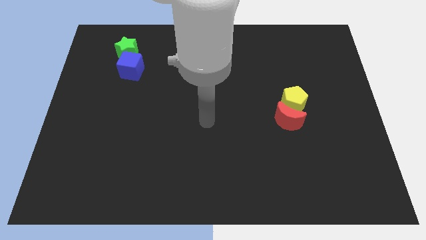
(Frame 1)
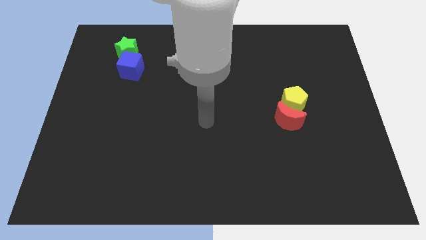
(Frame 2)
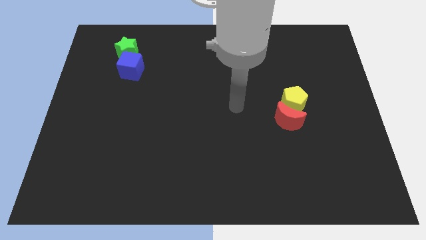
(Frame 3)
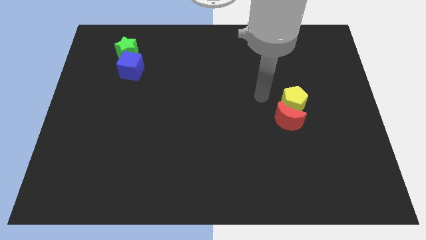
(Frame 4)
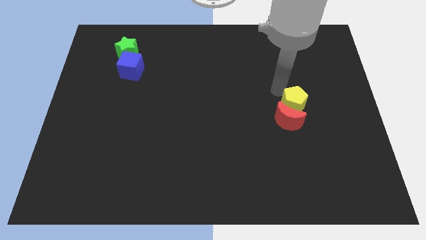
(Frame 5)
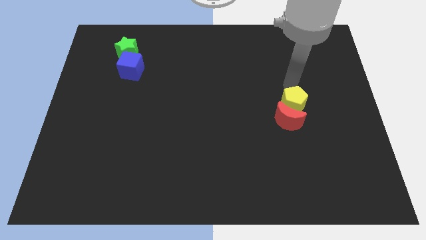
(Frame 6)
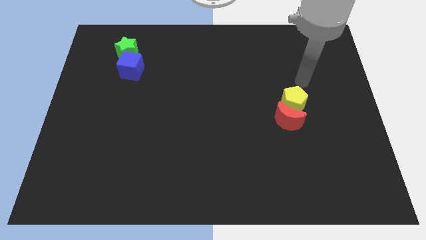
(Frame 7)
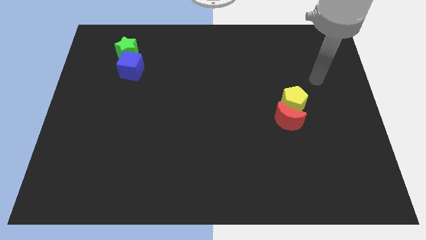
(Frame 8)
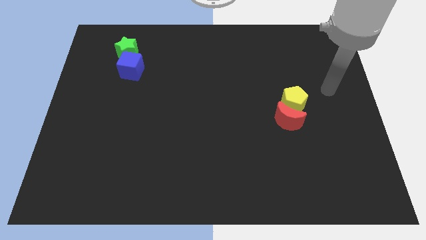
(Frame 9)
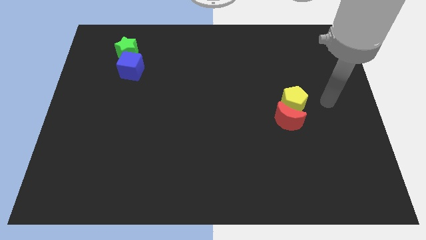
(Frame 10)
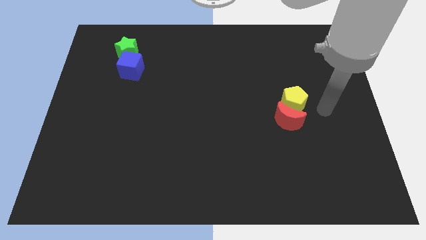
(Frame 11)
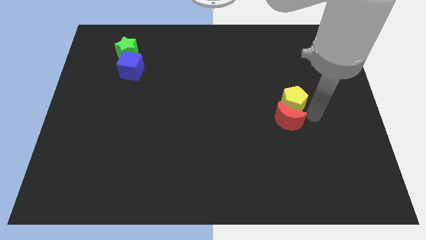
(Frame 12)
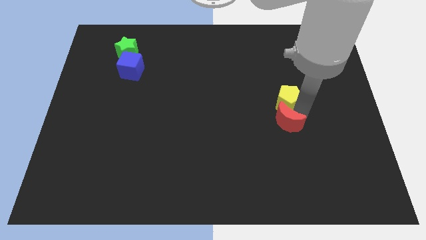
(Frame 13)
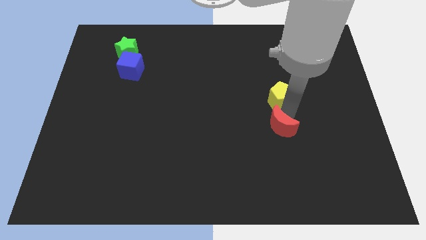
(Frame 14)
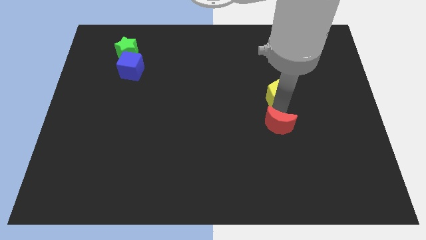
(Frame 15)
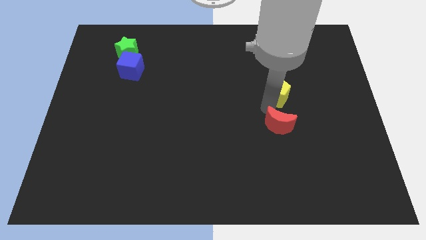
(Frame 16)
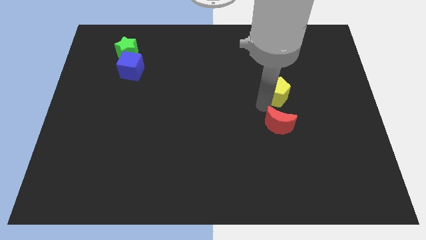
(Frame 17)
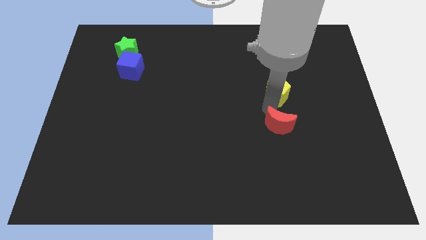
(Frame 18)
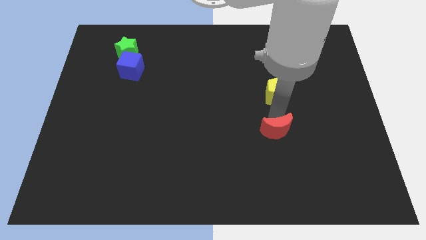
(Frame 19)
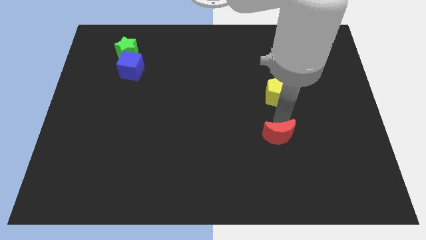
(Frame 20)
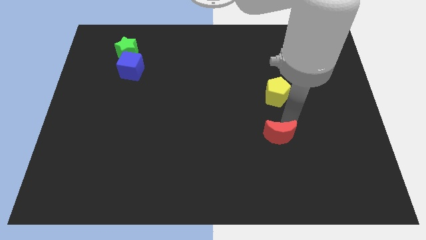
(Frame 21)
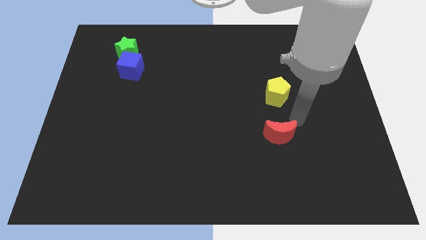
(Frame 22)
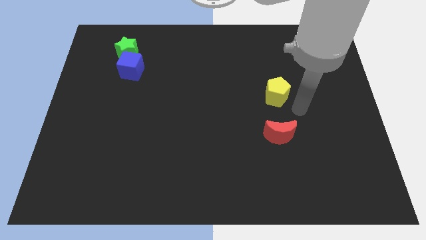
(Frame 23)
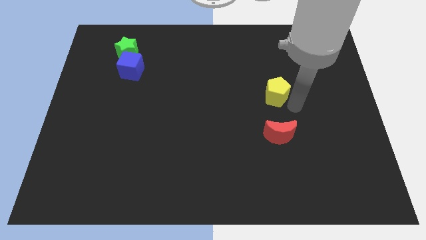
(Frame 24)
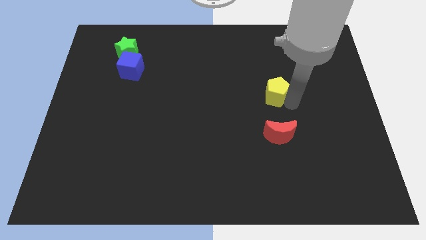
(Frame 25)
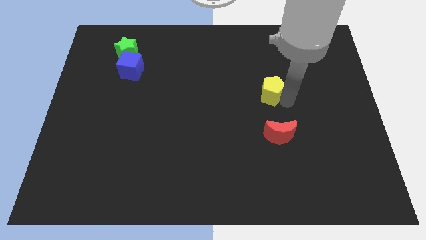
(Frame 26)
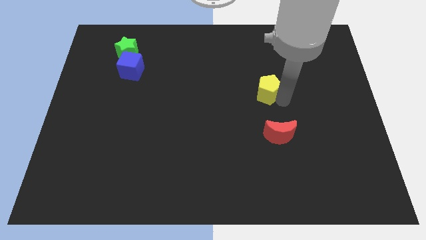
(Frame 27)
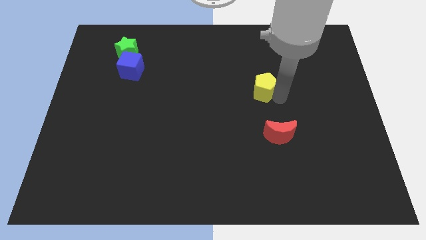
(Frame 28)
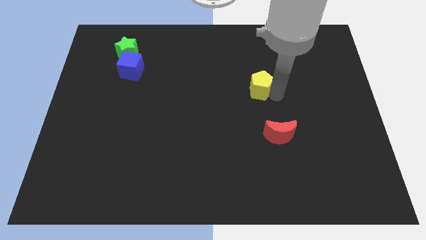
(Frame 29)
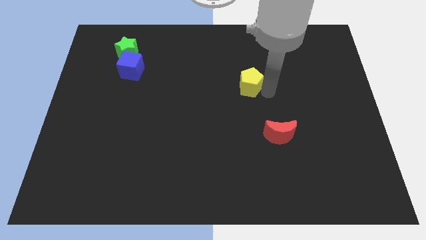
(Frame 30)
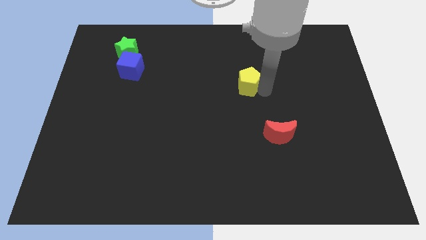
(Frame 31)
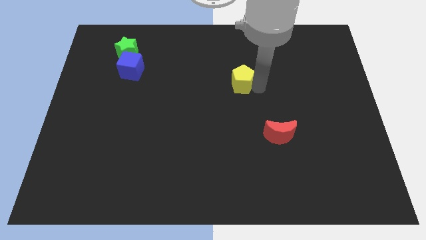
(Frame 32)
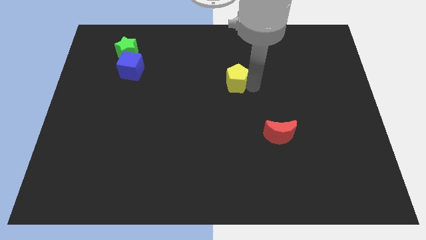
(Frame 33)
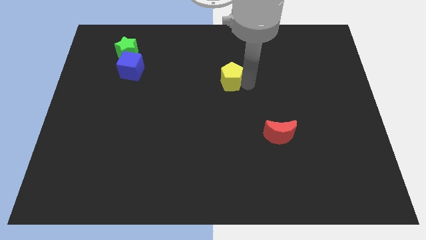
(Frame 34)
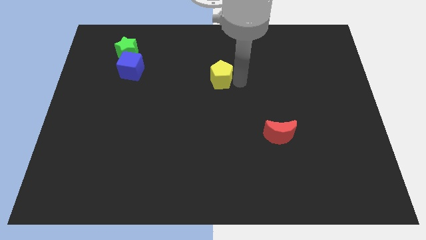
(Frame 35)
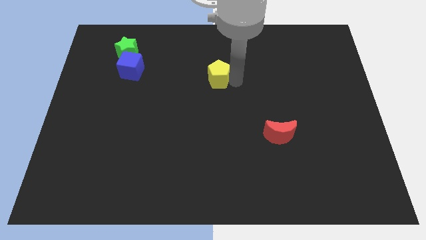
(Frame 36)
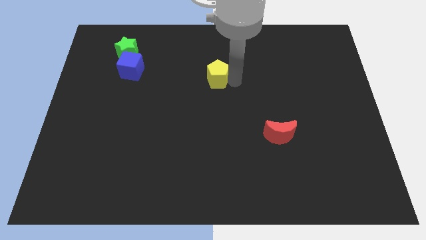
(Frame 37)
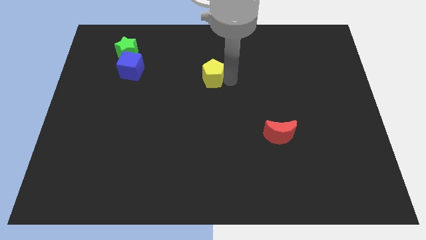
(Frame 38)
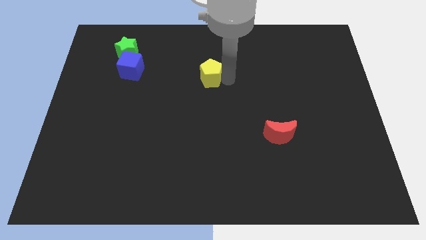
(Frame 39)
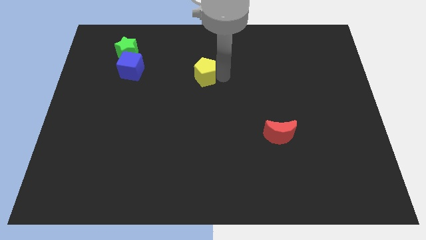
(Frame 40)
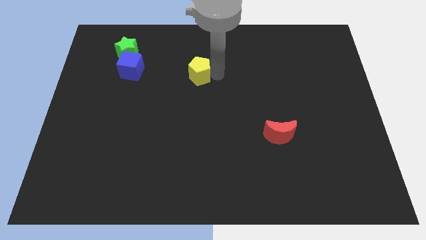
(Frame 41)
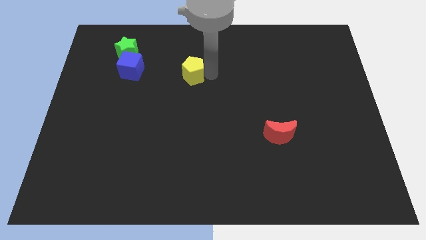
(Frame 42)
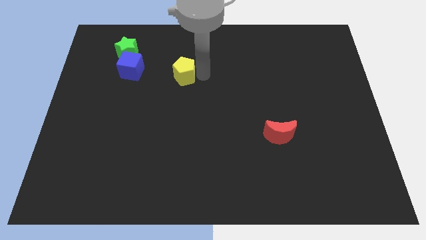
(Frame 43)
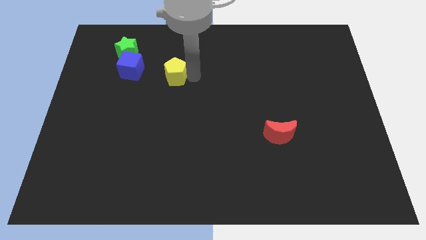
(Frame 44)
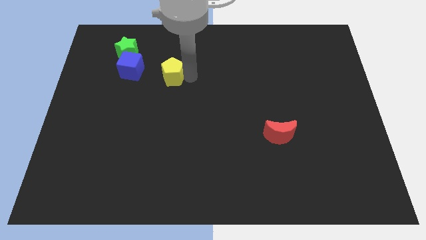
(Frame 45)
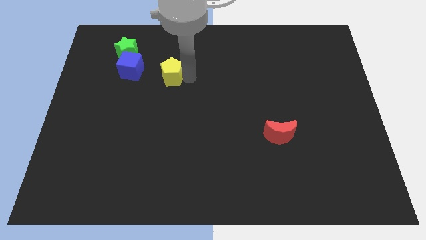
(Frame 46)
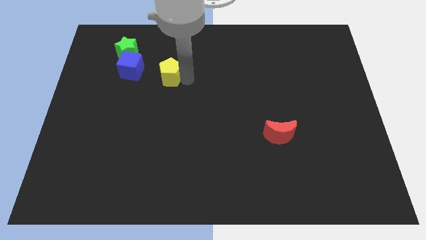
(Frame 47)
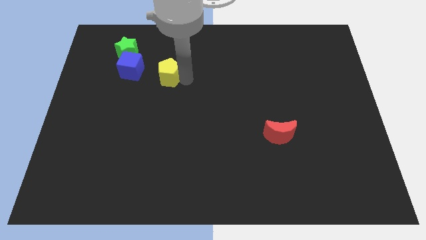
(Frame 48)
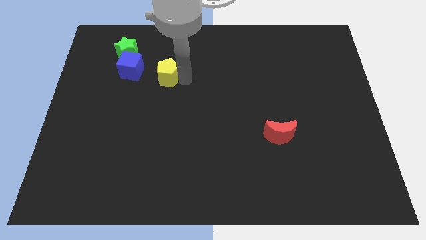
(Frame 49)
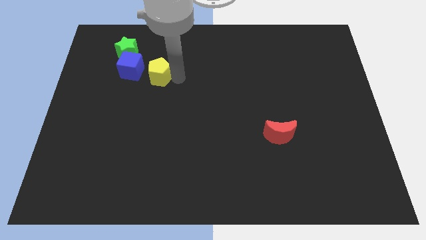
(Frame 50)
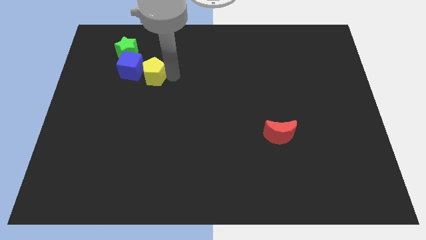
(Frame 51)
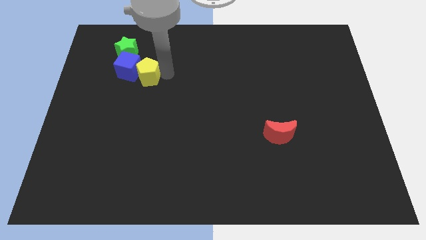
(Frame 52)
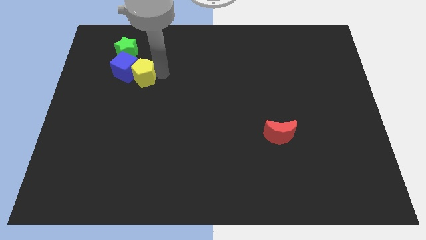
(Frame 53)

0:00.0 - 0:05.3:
put the pentagon close to the blue cube

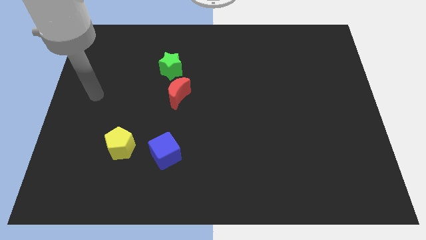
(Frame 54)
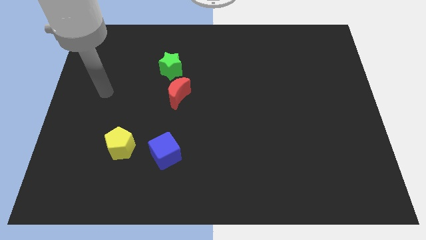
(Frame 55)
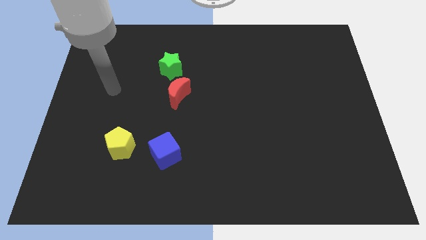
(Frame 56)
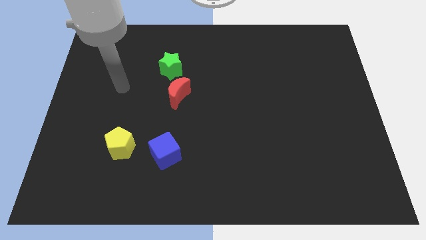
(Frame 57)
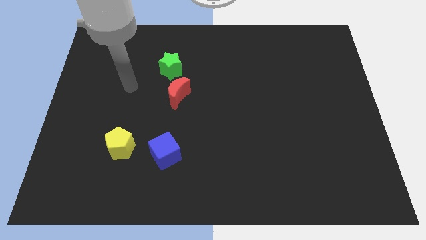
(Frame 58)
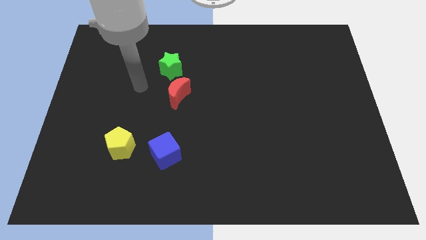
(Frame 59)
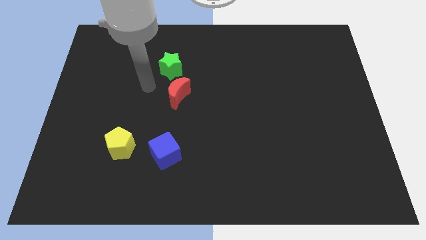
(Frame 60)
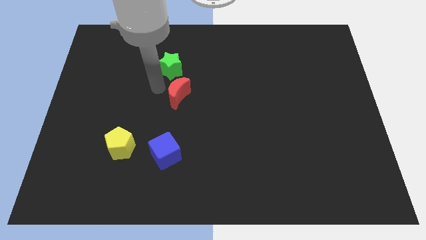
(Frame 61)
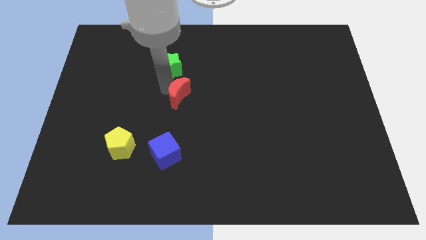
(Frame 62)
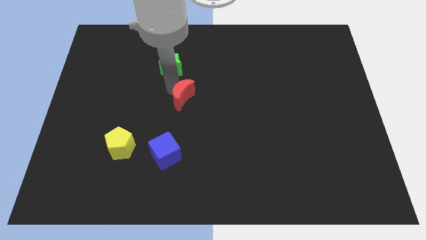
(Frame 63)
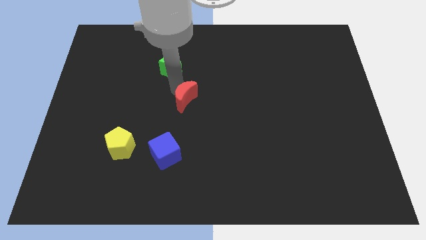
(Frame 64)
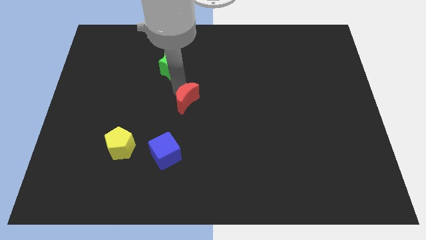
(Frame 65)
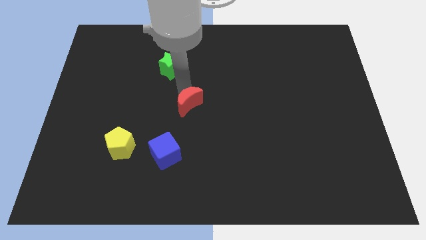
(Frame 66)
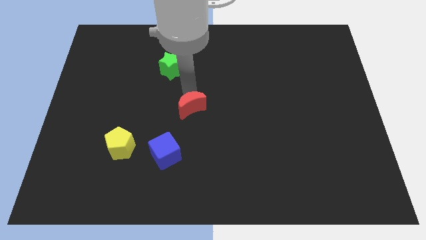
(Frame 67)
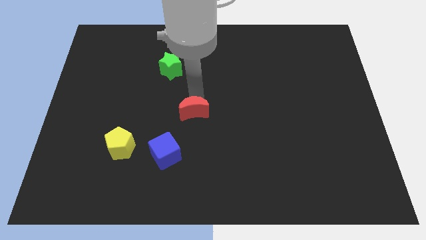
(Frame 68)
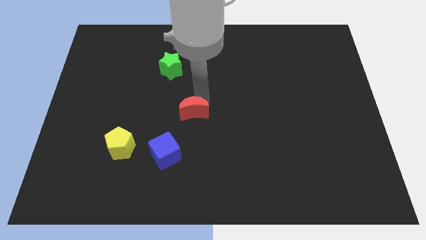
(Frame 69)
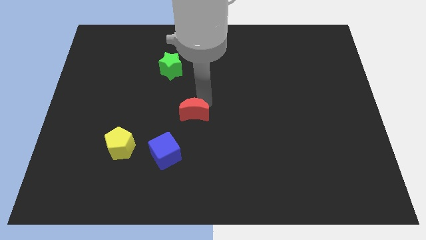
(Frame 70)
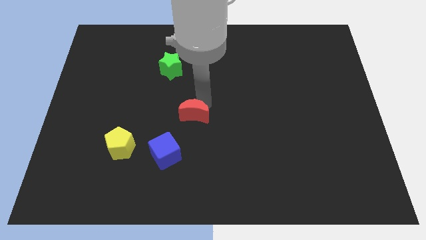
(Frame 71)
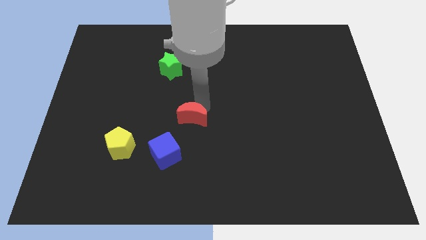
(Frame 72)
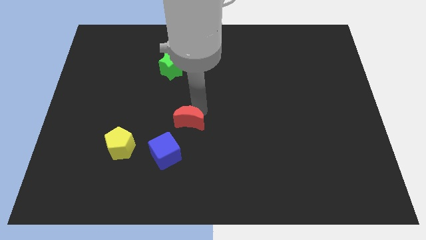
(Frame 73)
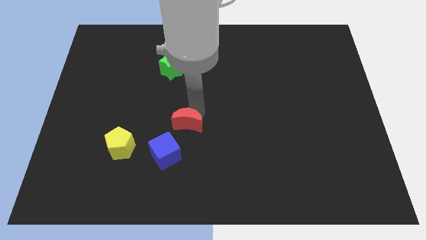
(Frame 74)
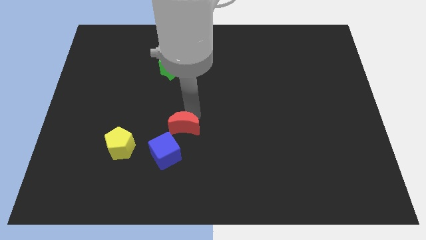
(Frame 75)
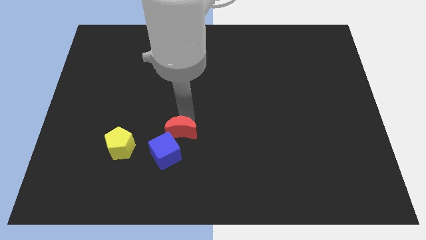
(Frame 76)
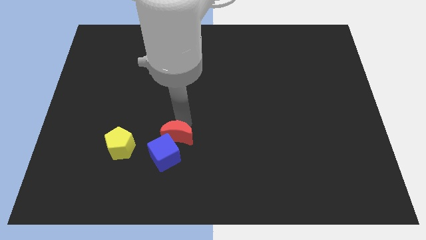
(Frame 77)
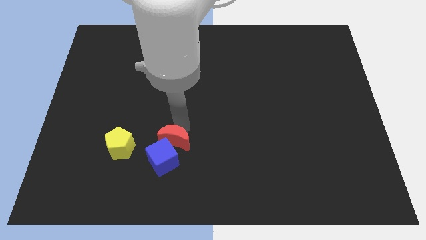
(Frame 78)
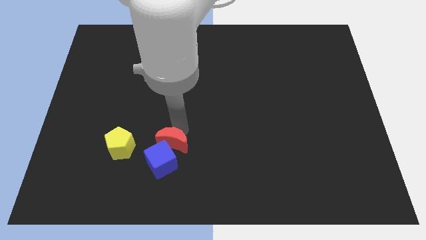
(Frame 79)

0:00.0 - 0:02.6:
slide the red moon towards the cube

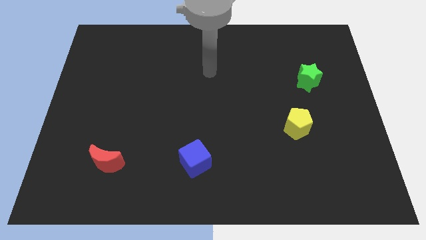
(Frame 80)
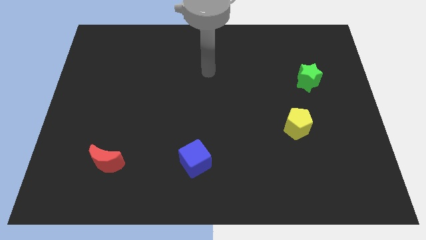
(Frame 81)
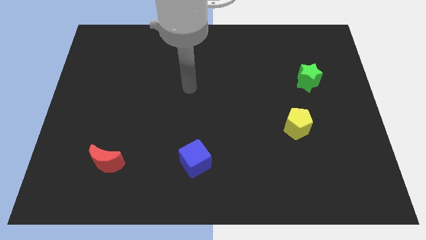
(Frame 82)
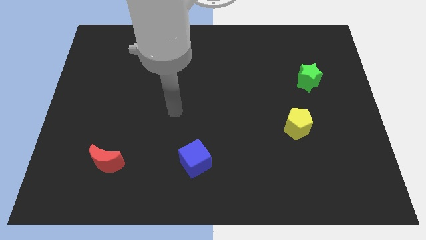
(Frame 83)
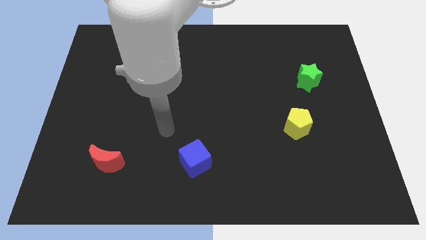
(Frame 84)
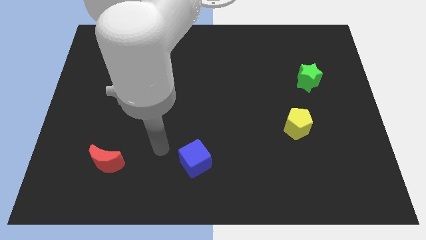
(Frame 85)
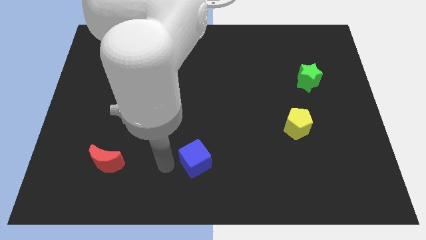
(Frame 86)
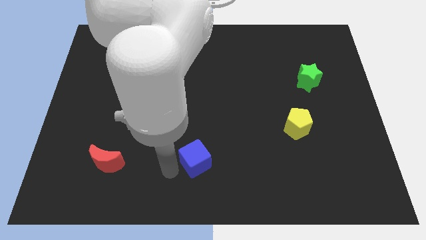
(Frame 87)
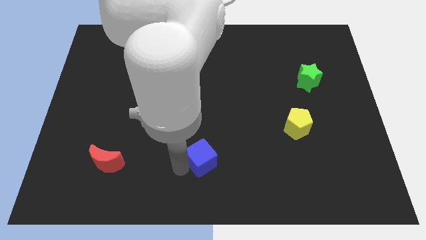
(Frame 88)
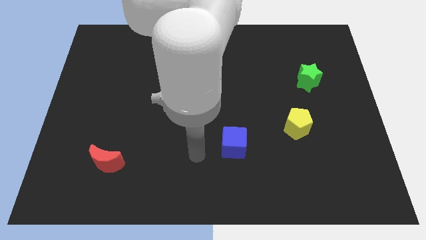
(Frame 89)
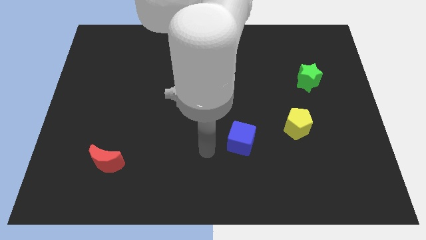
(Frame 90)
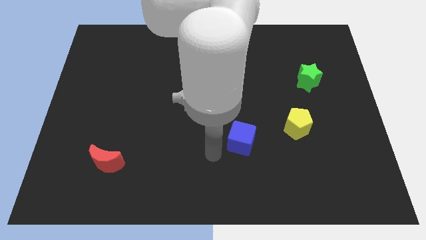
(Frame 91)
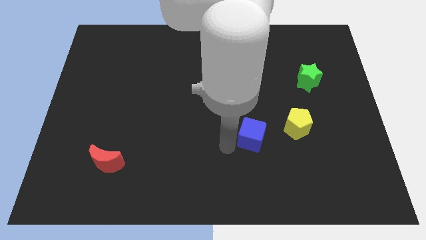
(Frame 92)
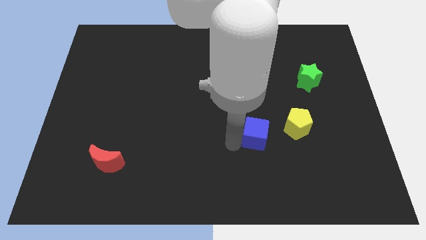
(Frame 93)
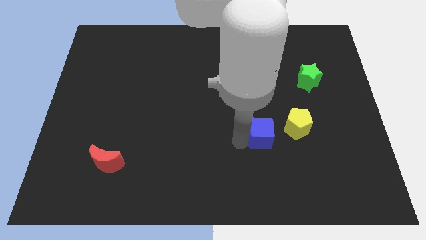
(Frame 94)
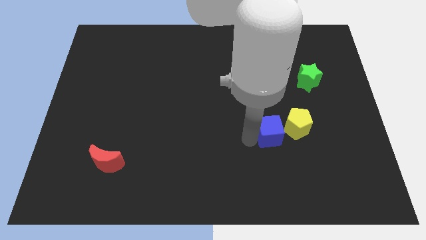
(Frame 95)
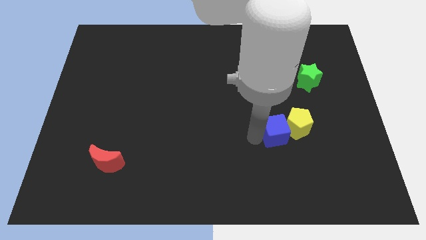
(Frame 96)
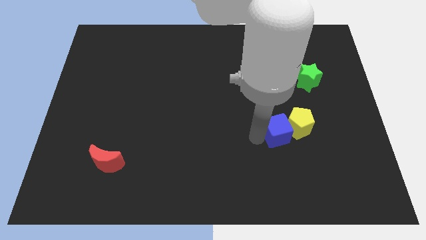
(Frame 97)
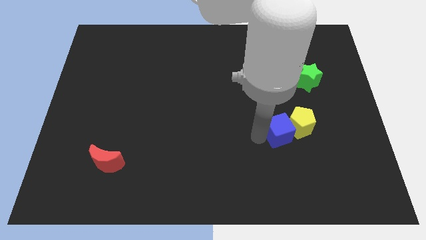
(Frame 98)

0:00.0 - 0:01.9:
slide the blue block towards the pentagon
